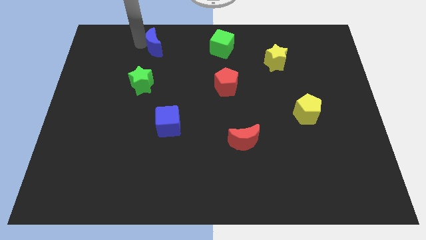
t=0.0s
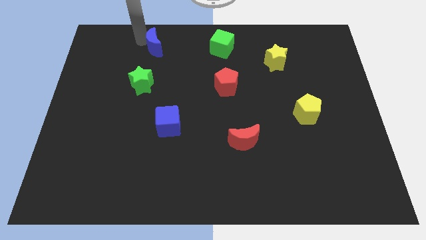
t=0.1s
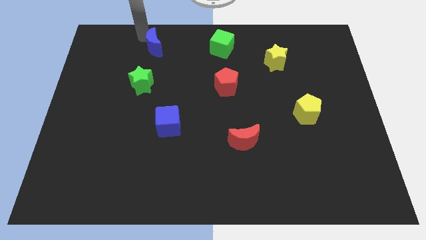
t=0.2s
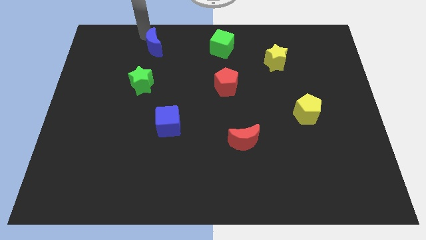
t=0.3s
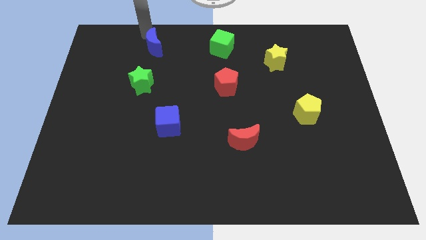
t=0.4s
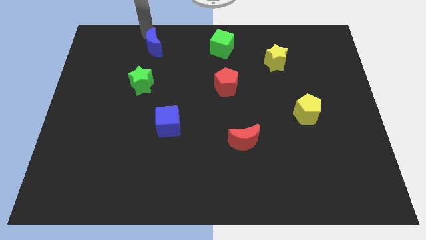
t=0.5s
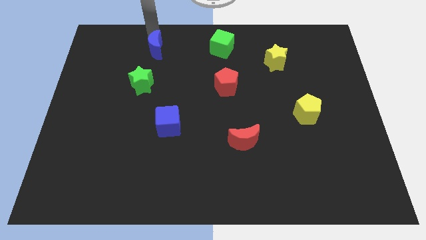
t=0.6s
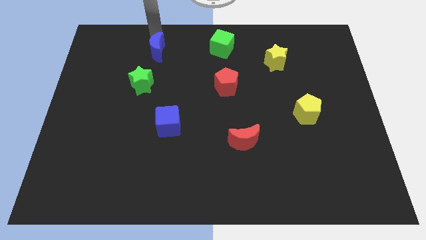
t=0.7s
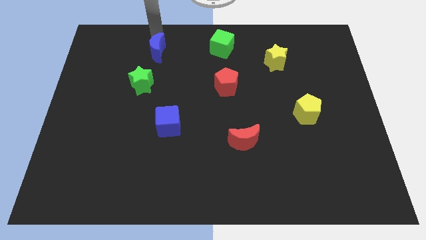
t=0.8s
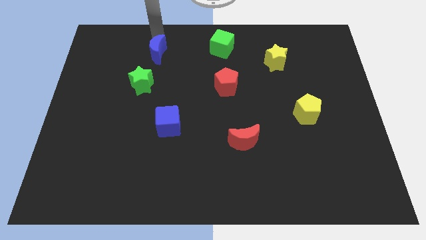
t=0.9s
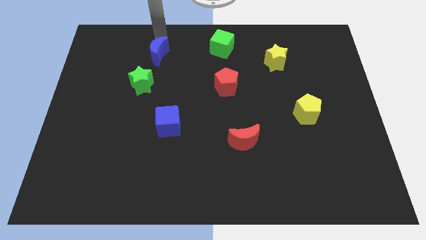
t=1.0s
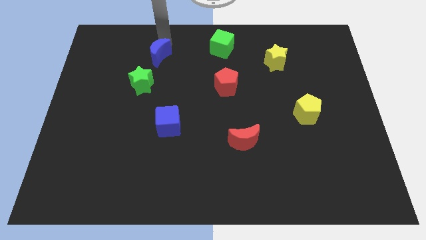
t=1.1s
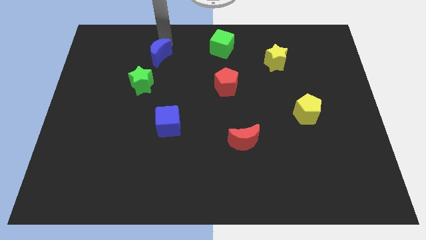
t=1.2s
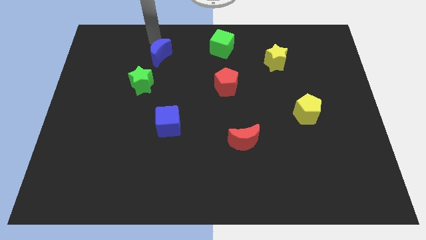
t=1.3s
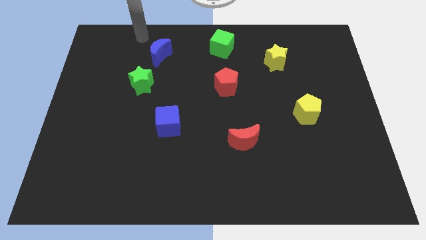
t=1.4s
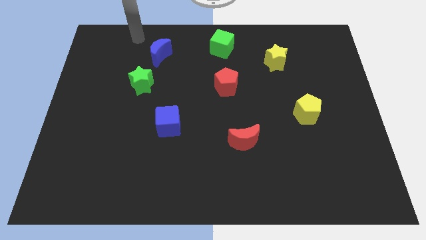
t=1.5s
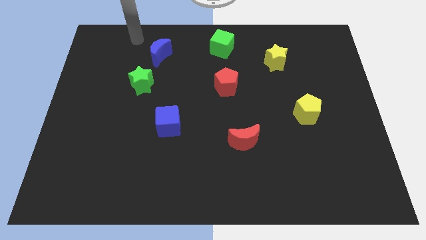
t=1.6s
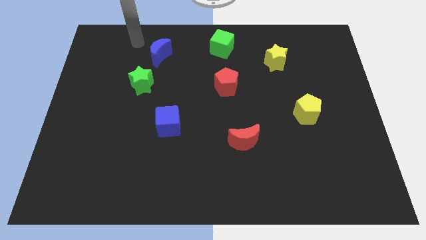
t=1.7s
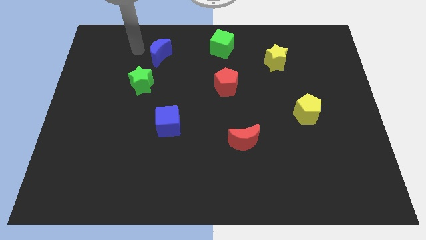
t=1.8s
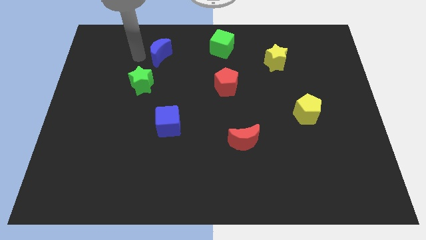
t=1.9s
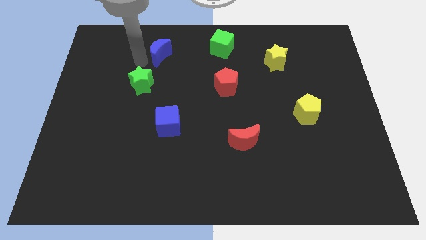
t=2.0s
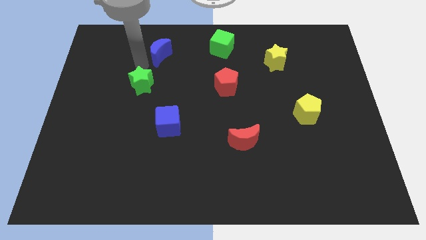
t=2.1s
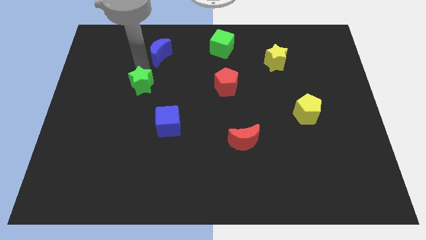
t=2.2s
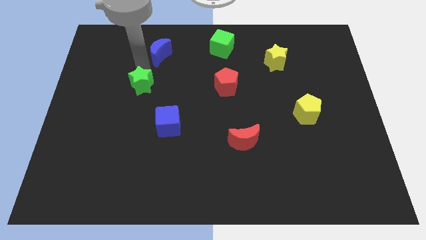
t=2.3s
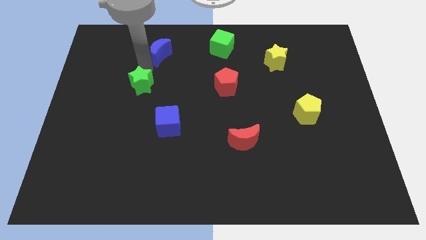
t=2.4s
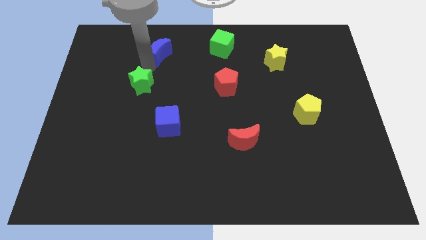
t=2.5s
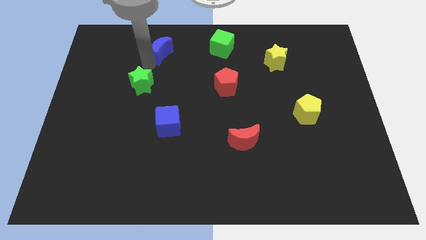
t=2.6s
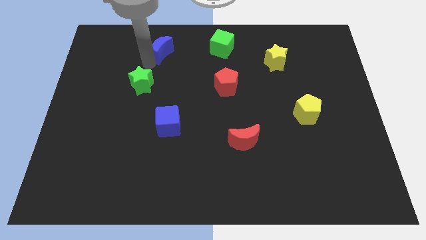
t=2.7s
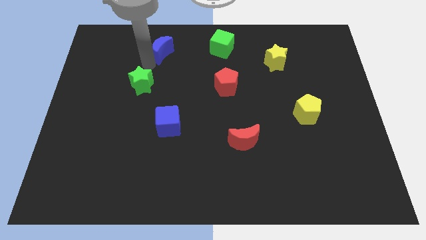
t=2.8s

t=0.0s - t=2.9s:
place the green star diagonally top right to the green star

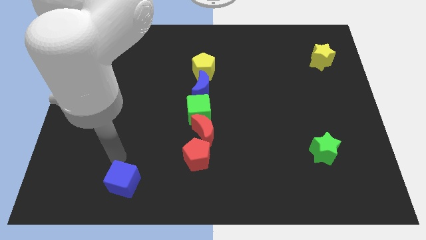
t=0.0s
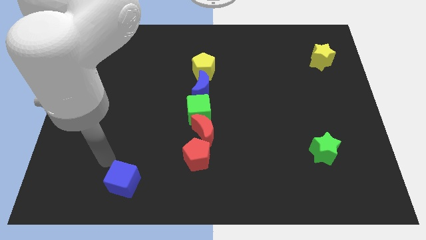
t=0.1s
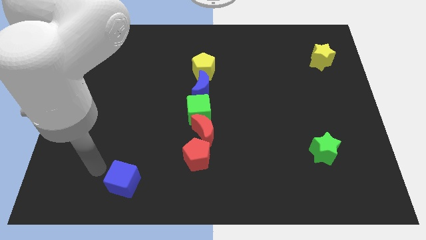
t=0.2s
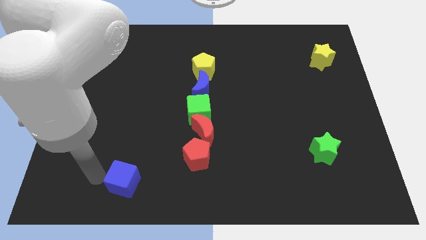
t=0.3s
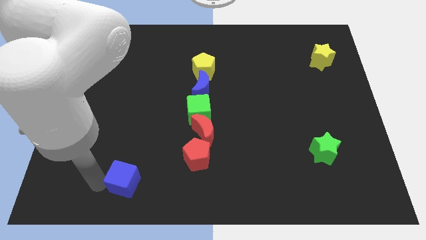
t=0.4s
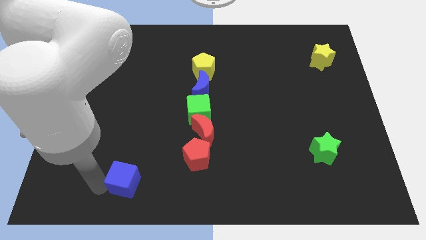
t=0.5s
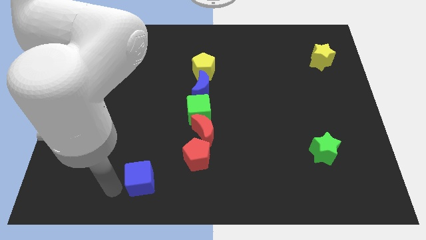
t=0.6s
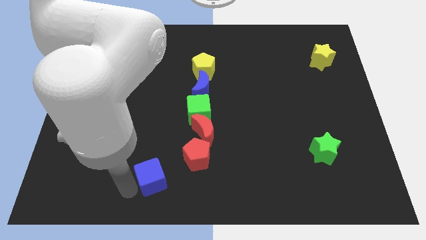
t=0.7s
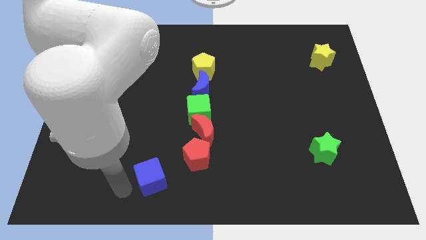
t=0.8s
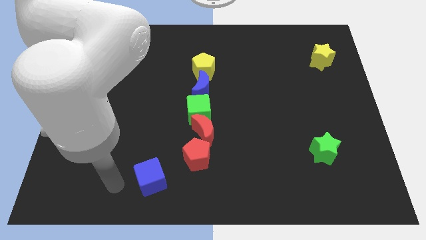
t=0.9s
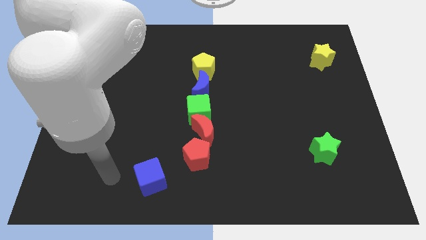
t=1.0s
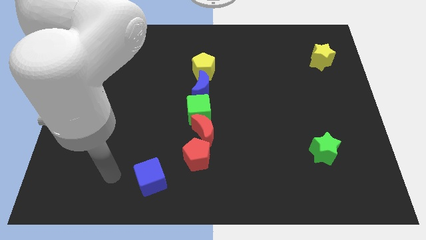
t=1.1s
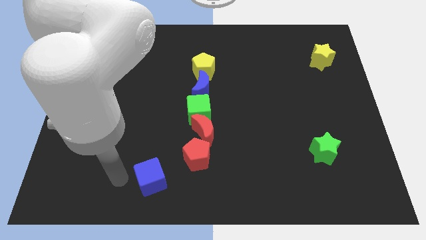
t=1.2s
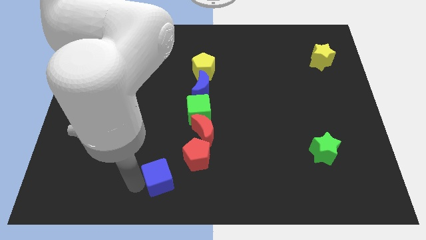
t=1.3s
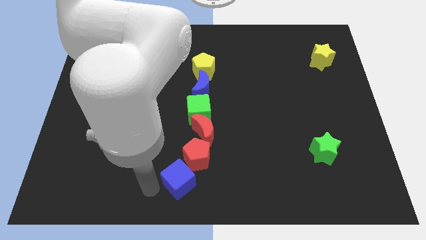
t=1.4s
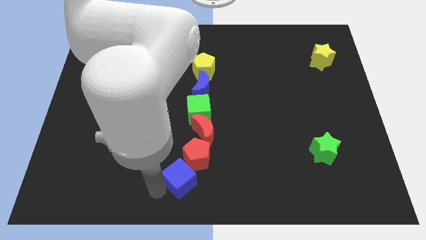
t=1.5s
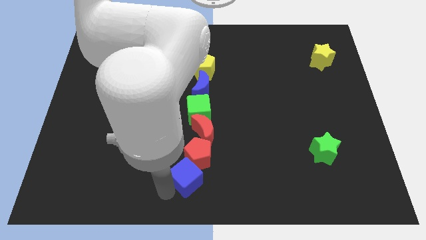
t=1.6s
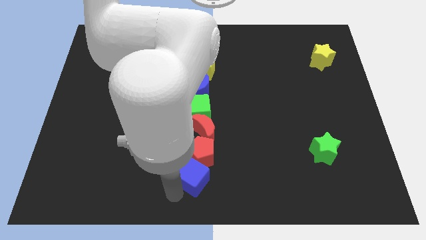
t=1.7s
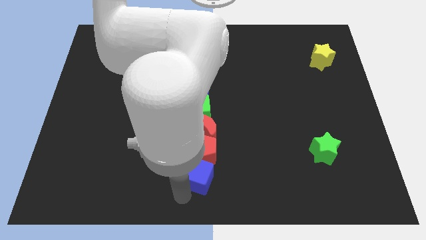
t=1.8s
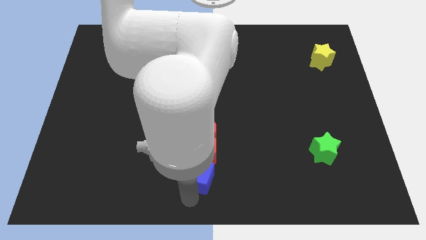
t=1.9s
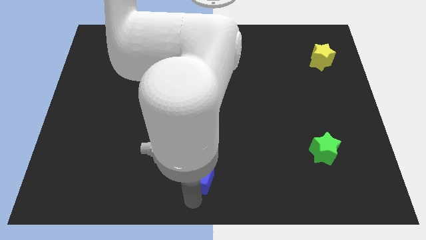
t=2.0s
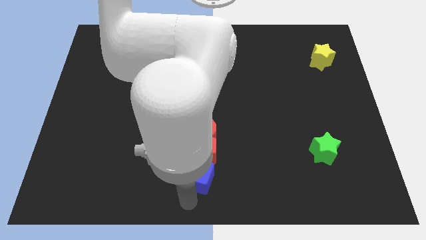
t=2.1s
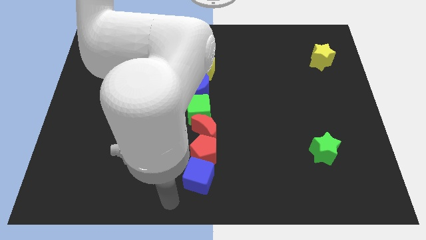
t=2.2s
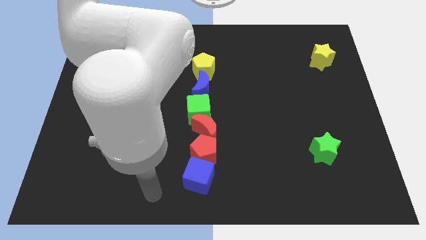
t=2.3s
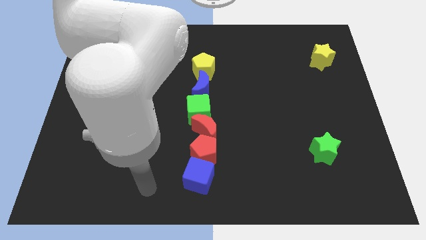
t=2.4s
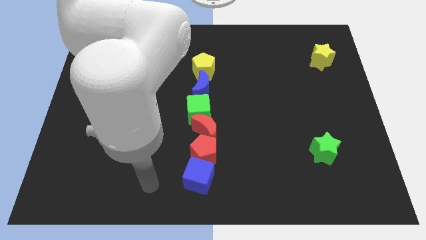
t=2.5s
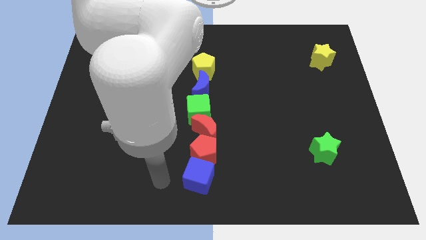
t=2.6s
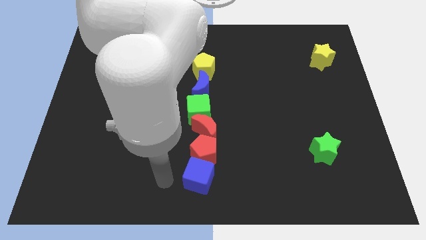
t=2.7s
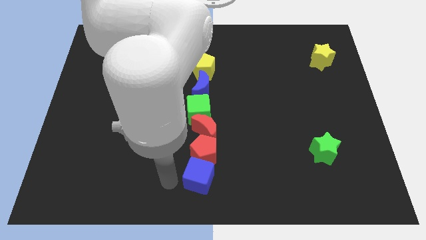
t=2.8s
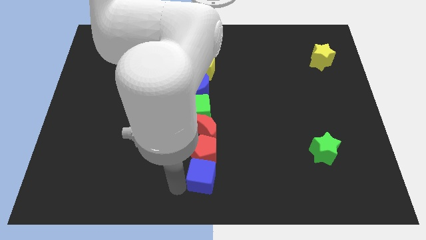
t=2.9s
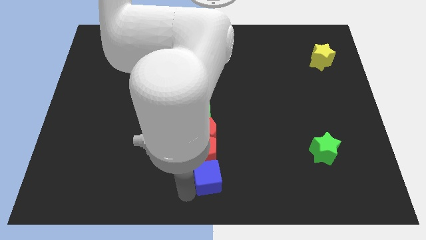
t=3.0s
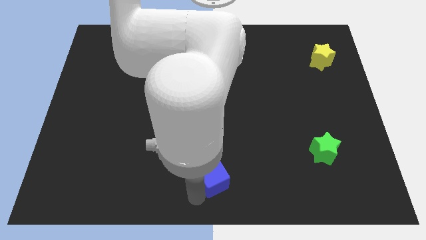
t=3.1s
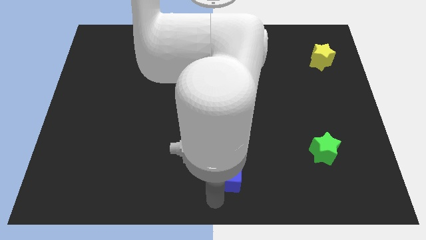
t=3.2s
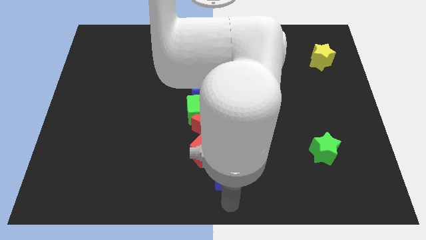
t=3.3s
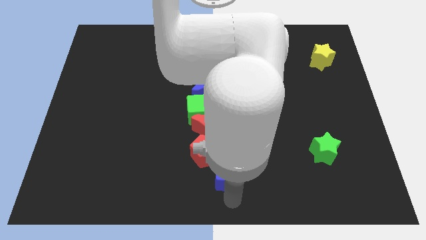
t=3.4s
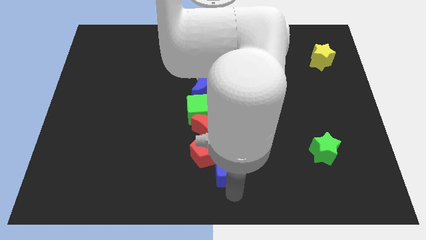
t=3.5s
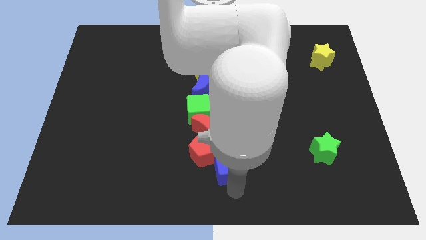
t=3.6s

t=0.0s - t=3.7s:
move the blue cube below the red pentagon

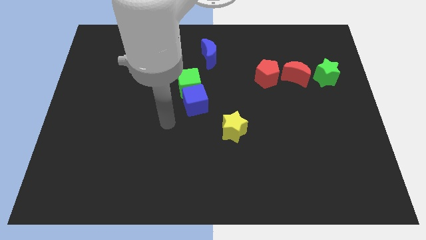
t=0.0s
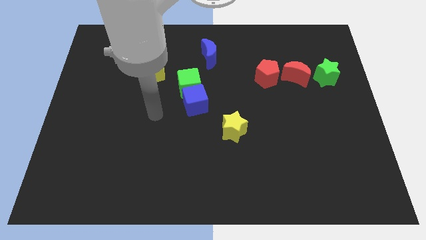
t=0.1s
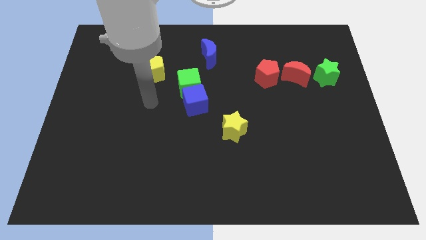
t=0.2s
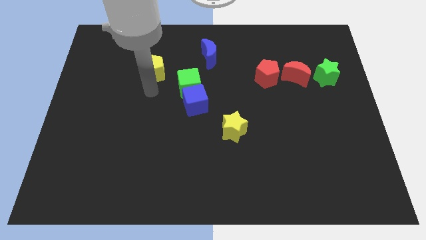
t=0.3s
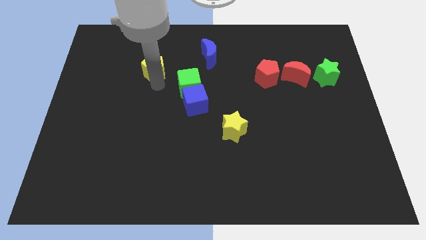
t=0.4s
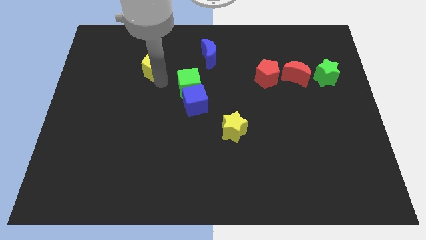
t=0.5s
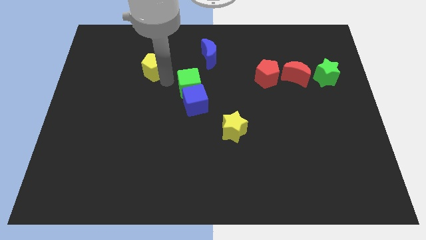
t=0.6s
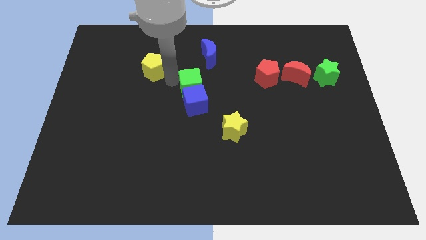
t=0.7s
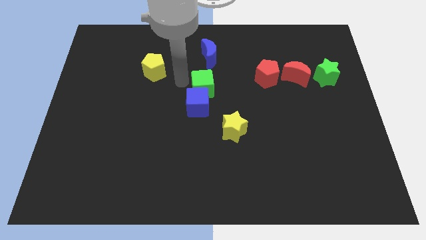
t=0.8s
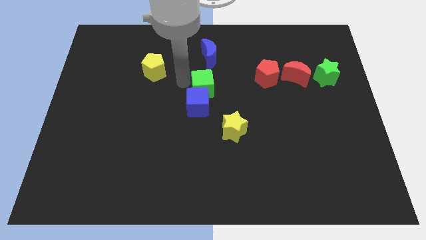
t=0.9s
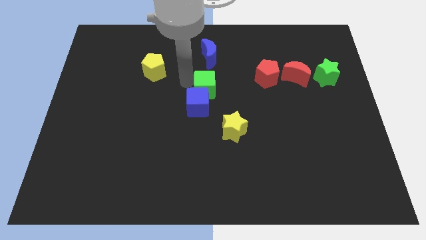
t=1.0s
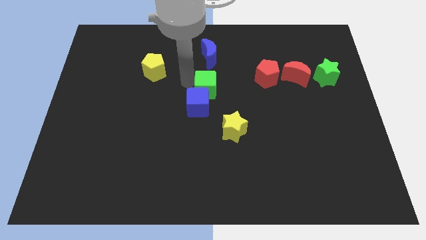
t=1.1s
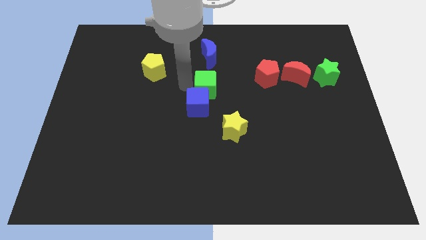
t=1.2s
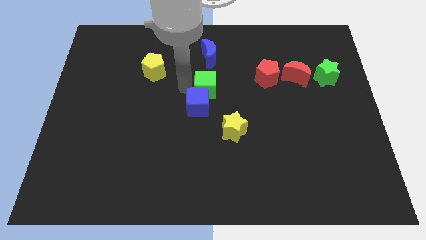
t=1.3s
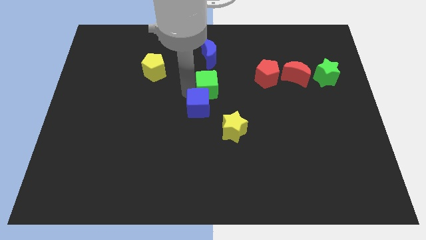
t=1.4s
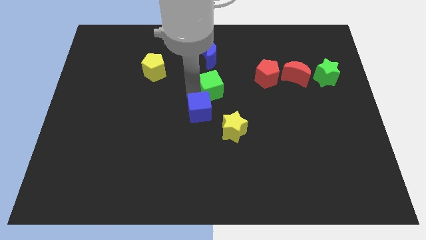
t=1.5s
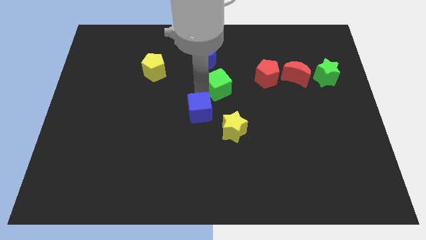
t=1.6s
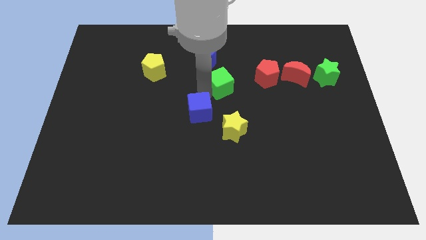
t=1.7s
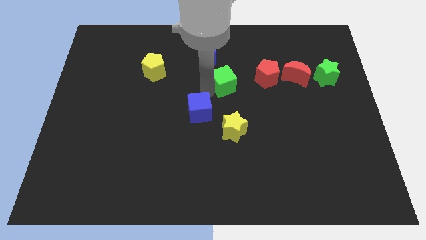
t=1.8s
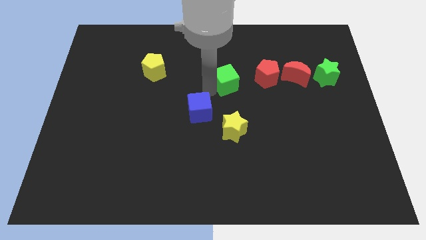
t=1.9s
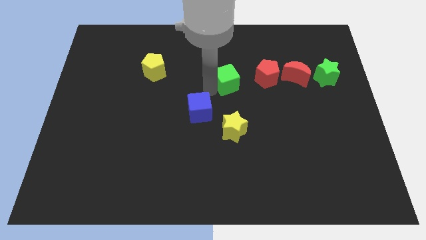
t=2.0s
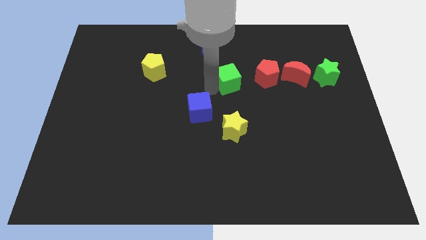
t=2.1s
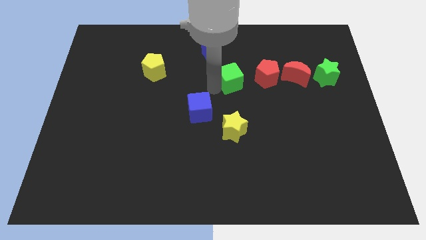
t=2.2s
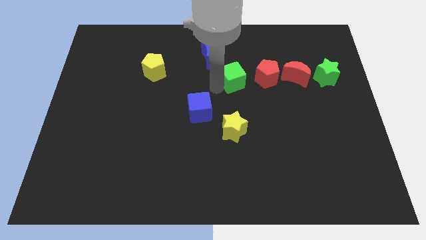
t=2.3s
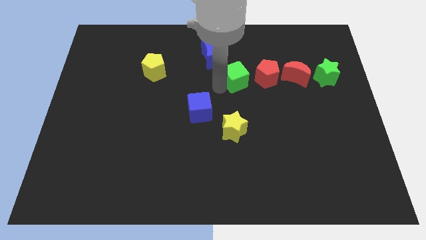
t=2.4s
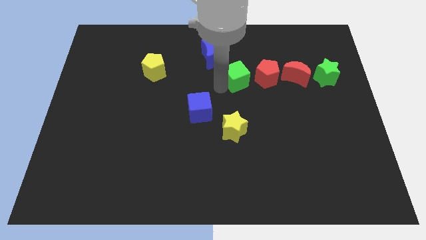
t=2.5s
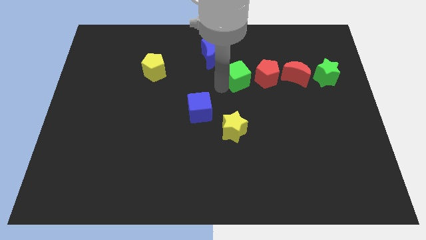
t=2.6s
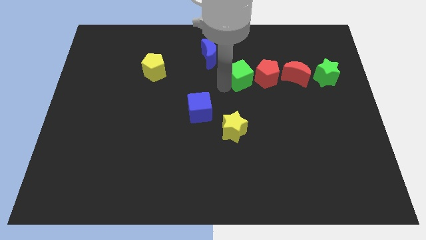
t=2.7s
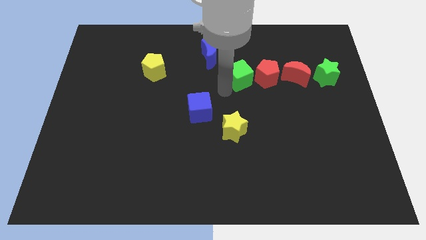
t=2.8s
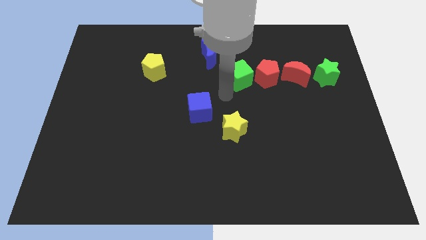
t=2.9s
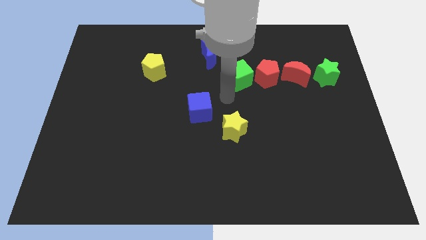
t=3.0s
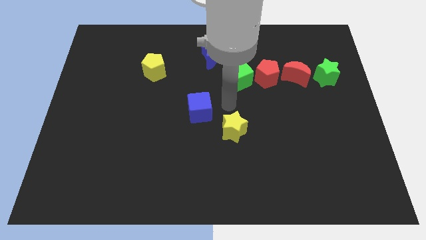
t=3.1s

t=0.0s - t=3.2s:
push the green cube to the left side of the red pentagon
